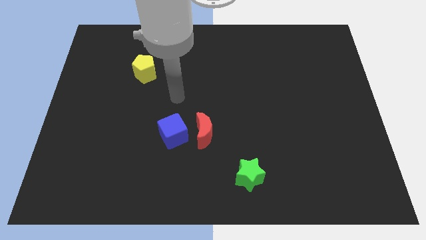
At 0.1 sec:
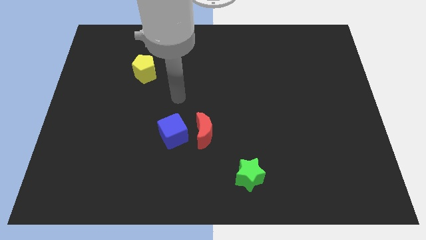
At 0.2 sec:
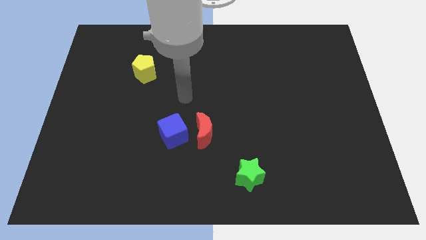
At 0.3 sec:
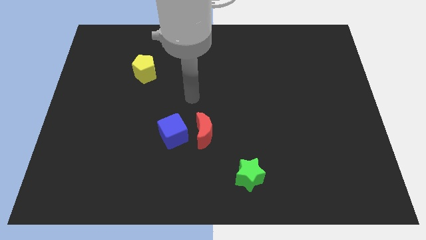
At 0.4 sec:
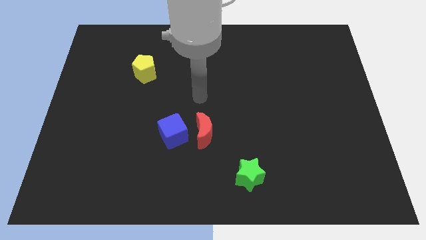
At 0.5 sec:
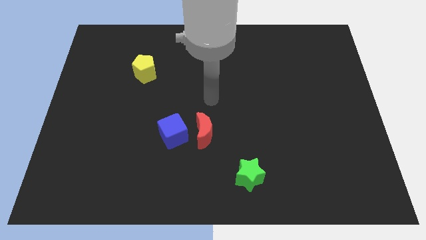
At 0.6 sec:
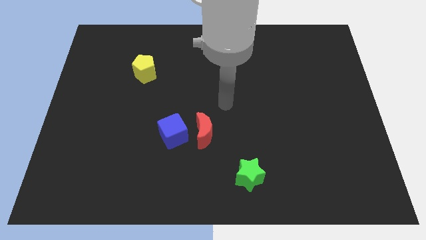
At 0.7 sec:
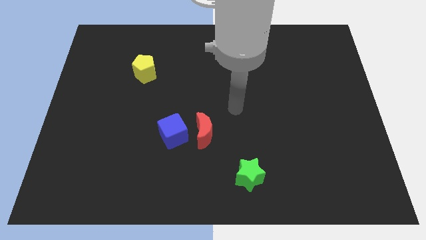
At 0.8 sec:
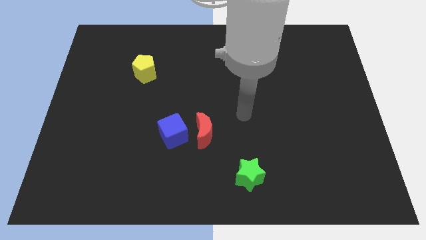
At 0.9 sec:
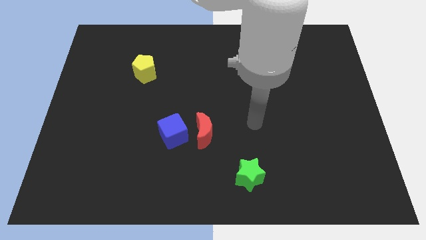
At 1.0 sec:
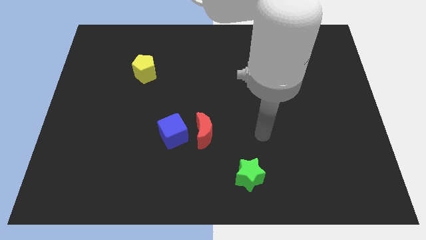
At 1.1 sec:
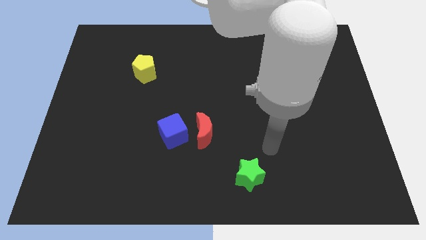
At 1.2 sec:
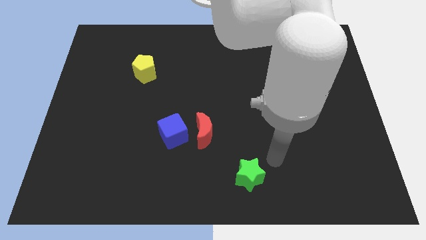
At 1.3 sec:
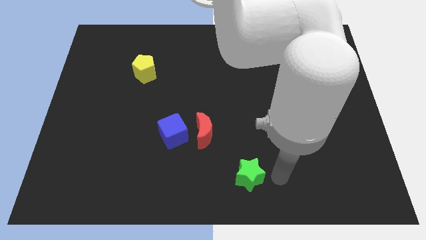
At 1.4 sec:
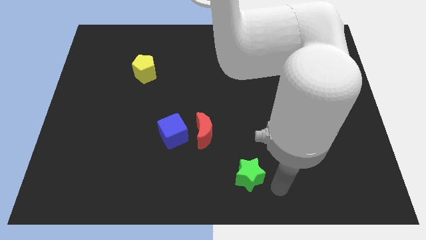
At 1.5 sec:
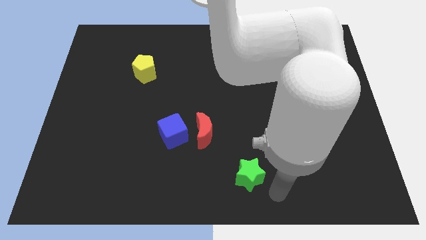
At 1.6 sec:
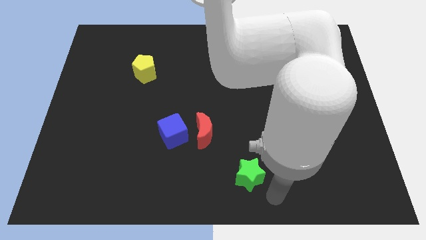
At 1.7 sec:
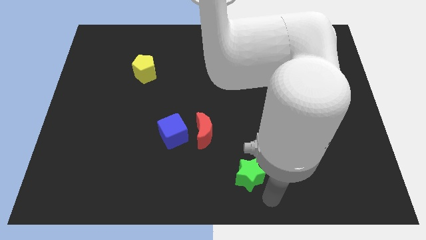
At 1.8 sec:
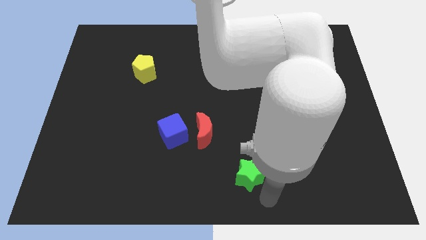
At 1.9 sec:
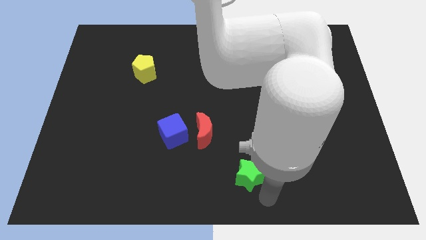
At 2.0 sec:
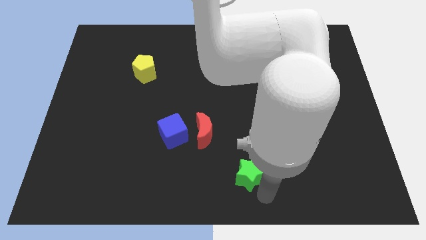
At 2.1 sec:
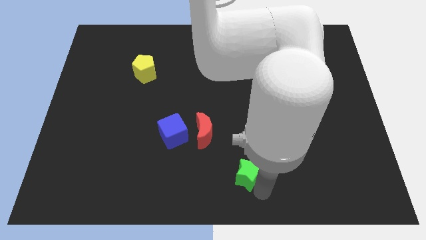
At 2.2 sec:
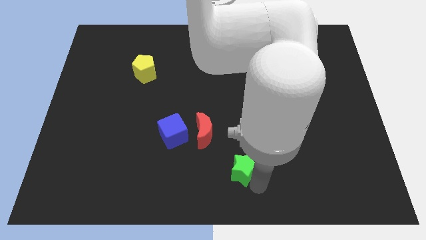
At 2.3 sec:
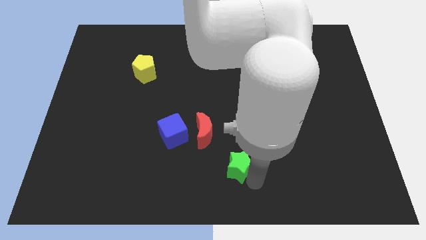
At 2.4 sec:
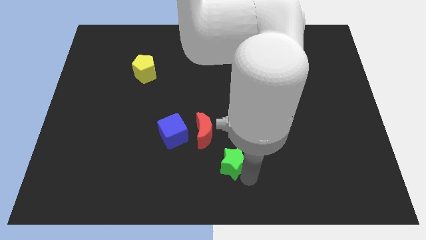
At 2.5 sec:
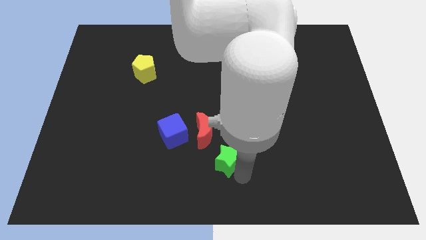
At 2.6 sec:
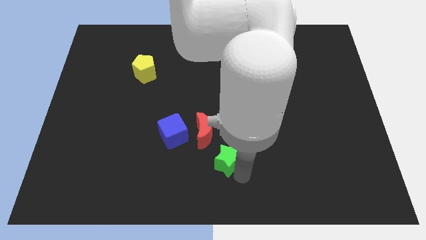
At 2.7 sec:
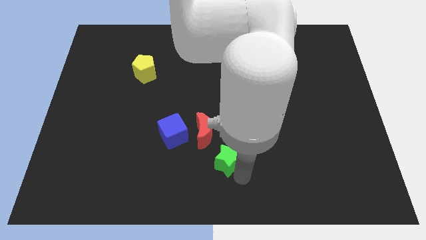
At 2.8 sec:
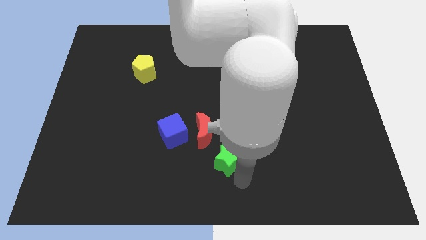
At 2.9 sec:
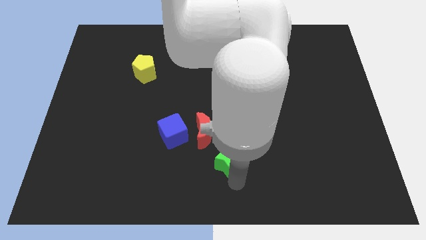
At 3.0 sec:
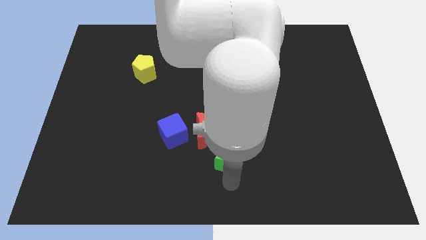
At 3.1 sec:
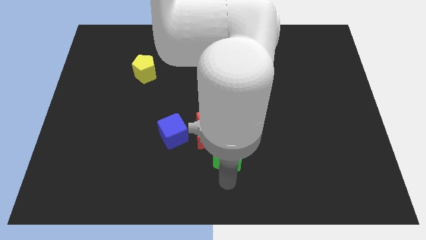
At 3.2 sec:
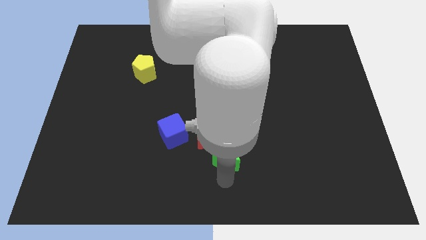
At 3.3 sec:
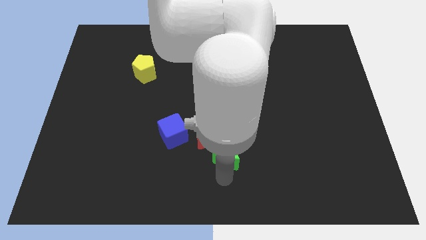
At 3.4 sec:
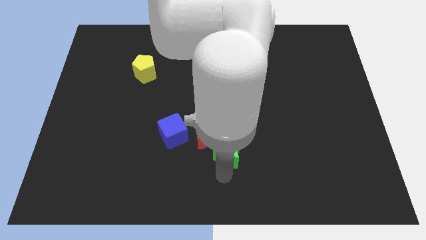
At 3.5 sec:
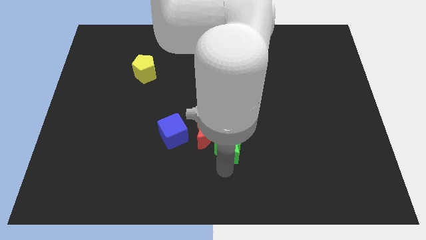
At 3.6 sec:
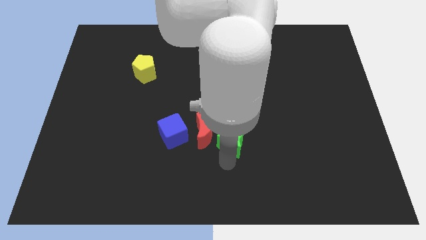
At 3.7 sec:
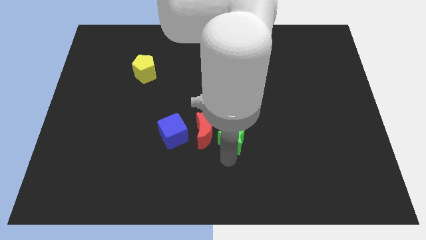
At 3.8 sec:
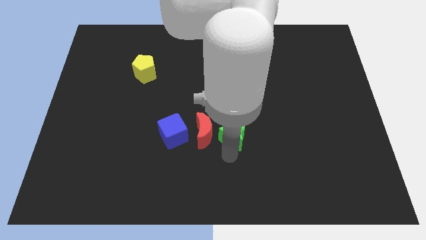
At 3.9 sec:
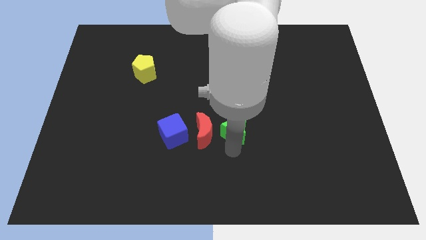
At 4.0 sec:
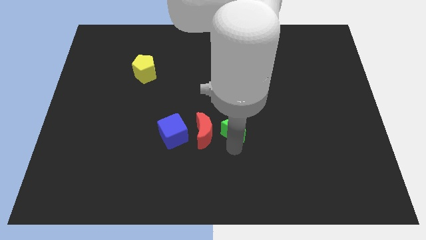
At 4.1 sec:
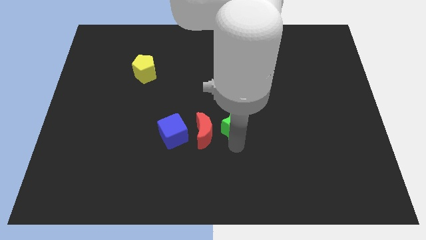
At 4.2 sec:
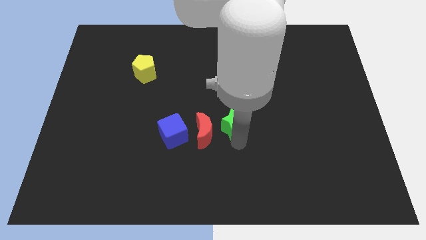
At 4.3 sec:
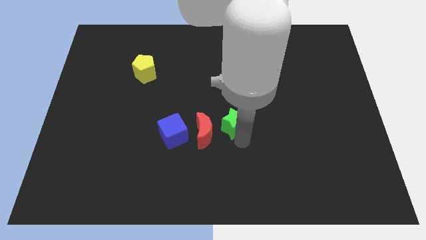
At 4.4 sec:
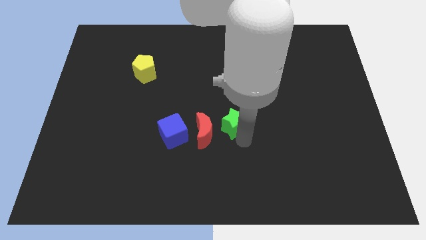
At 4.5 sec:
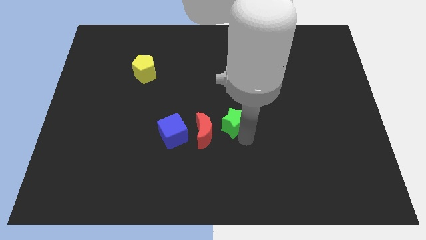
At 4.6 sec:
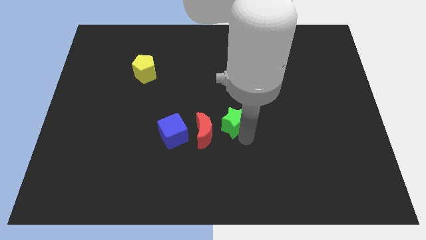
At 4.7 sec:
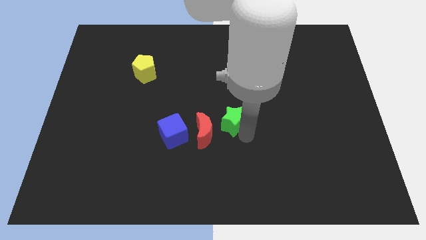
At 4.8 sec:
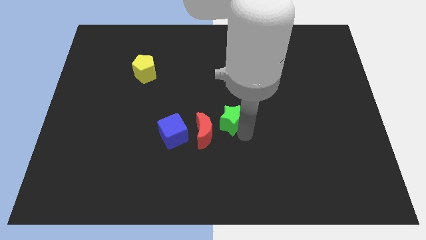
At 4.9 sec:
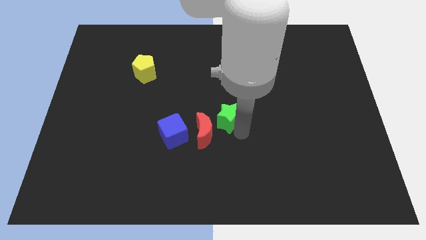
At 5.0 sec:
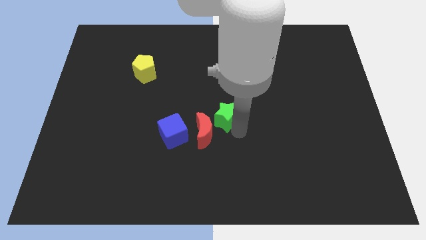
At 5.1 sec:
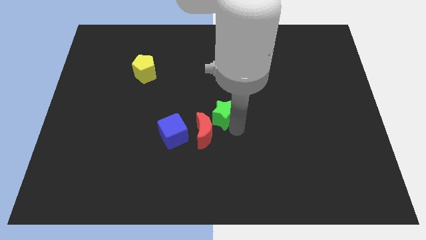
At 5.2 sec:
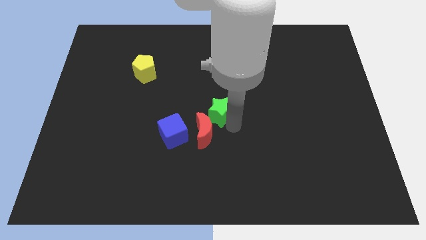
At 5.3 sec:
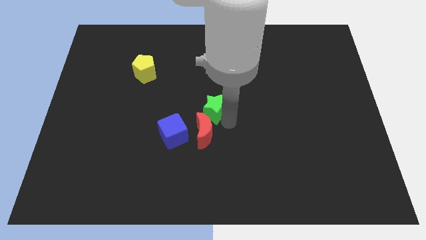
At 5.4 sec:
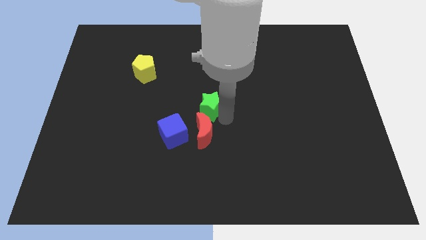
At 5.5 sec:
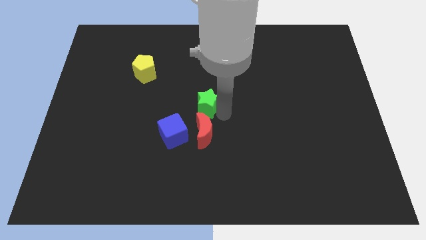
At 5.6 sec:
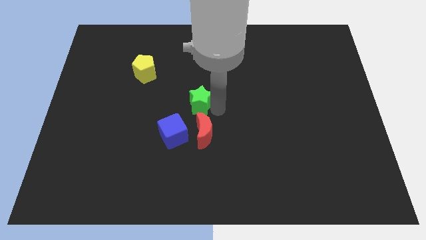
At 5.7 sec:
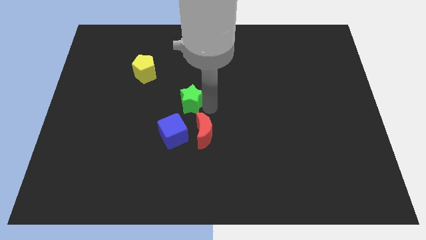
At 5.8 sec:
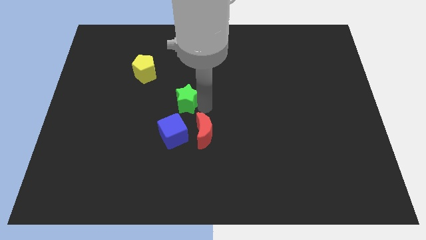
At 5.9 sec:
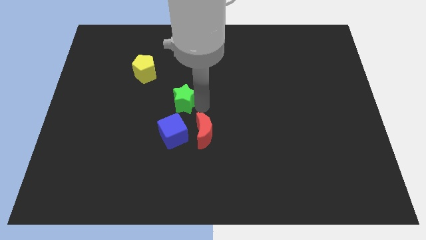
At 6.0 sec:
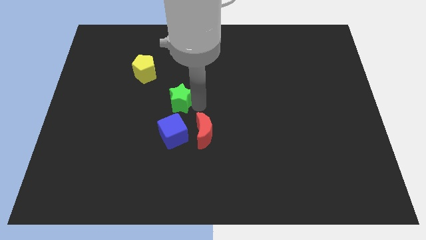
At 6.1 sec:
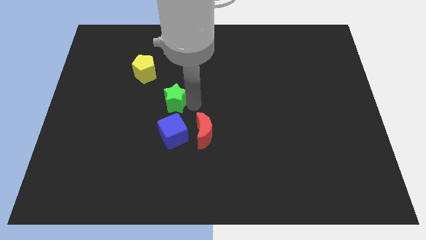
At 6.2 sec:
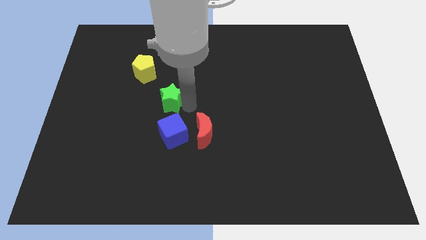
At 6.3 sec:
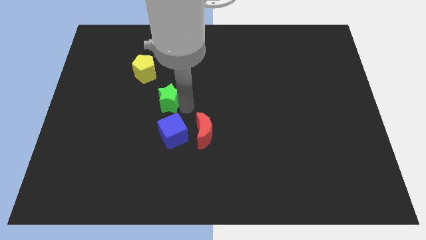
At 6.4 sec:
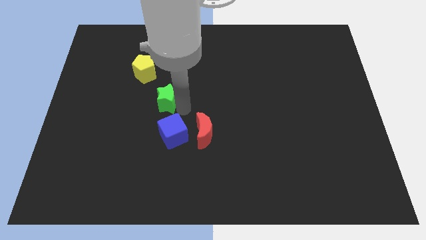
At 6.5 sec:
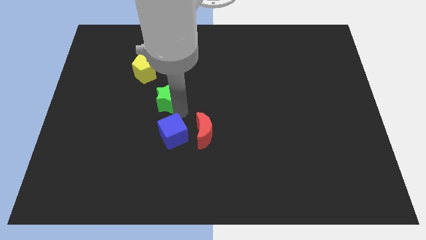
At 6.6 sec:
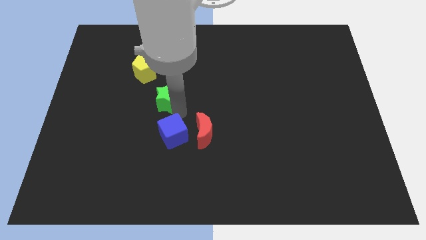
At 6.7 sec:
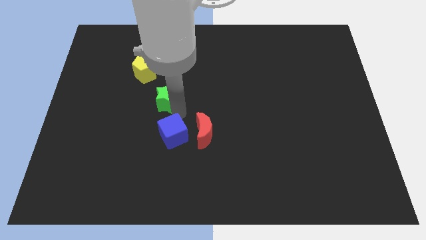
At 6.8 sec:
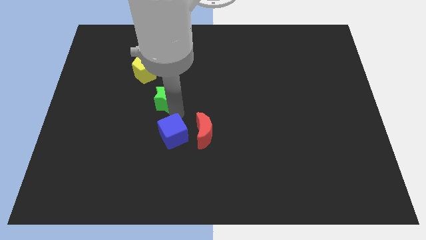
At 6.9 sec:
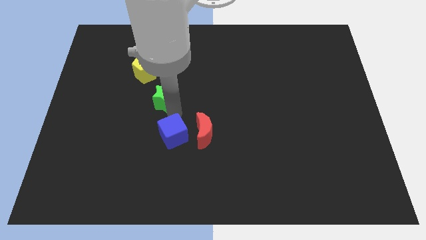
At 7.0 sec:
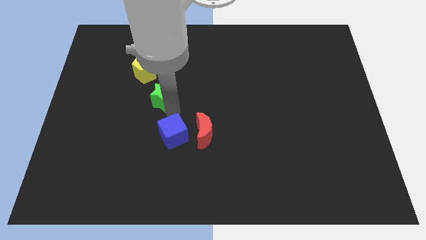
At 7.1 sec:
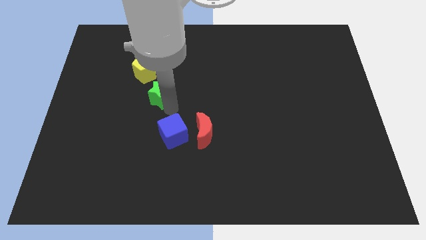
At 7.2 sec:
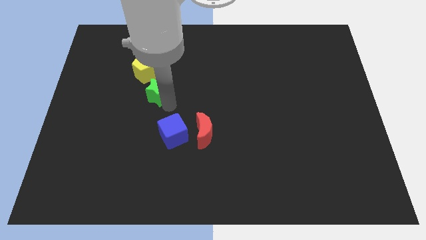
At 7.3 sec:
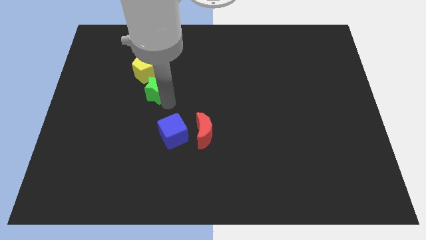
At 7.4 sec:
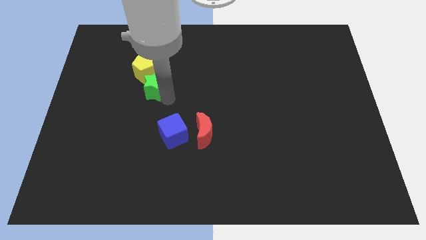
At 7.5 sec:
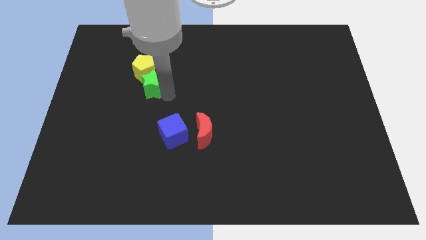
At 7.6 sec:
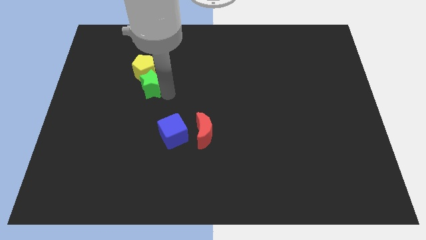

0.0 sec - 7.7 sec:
push the green block close to the pentagon

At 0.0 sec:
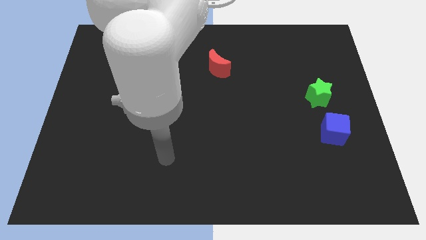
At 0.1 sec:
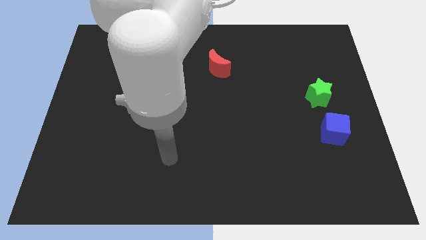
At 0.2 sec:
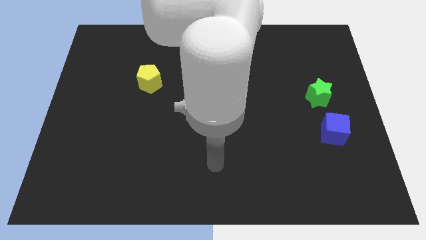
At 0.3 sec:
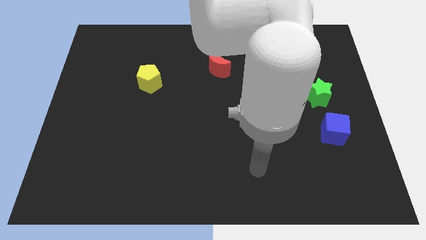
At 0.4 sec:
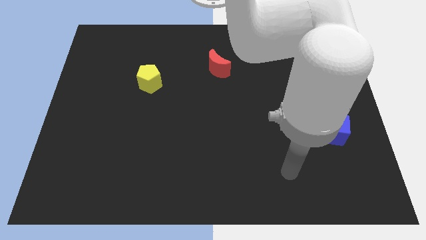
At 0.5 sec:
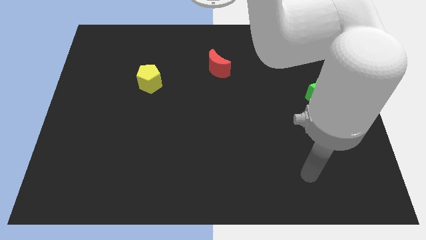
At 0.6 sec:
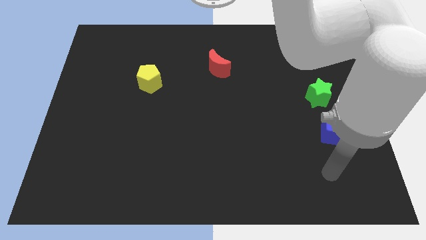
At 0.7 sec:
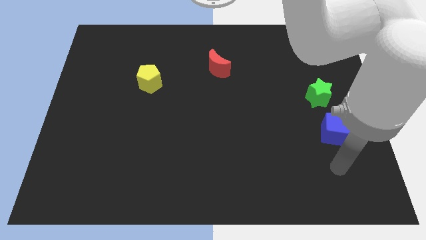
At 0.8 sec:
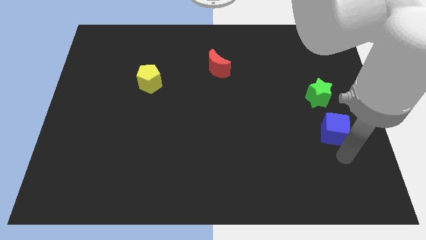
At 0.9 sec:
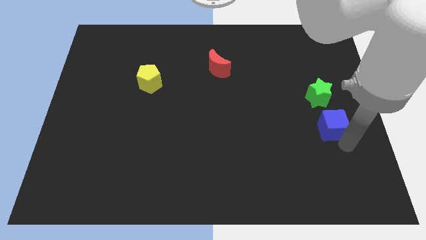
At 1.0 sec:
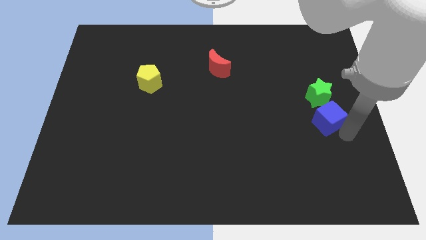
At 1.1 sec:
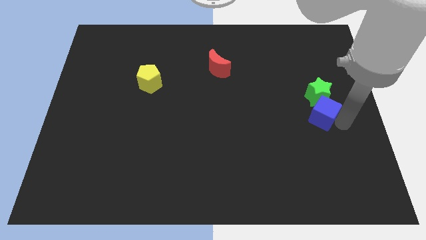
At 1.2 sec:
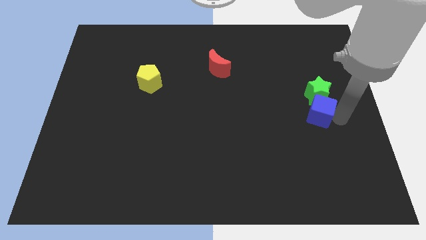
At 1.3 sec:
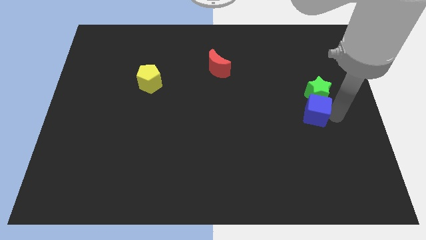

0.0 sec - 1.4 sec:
slide the blue block towards the green block
